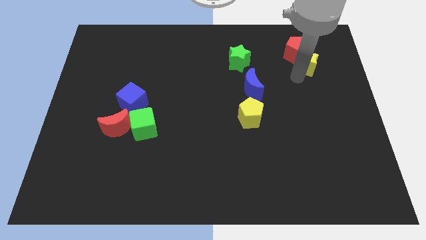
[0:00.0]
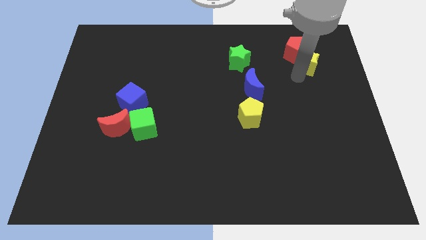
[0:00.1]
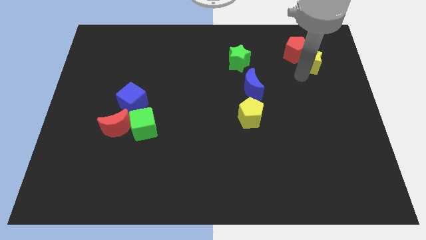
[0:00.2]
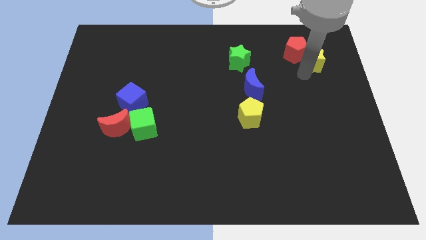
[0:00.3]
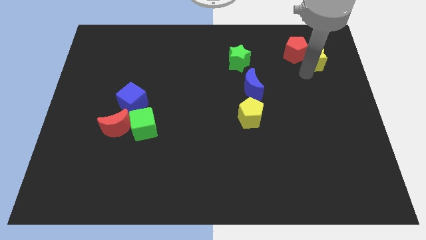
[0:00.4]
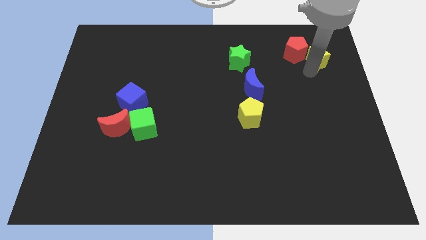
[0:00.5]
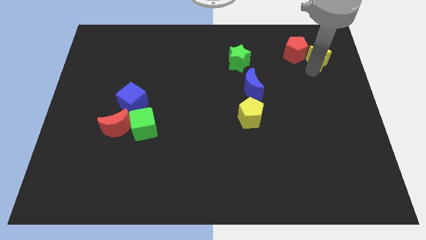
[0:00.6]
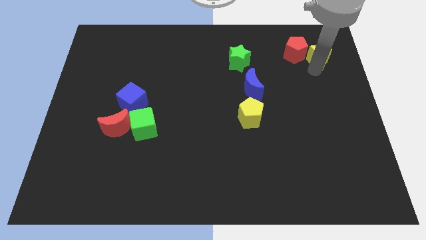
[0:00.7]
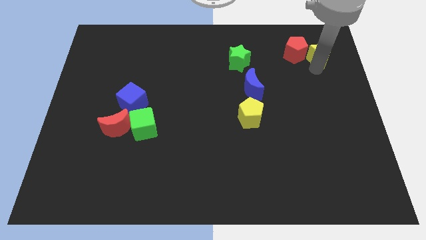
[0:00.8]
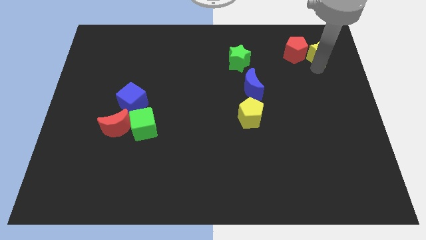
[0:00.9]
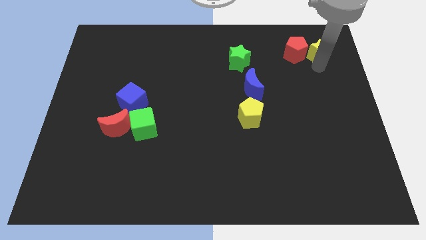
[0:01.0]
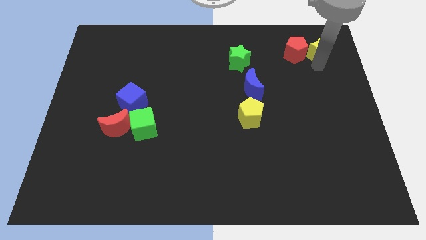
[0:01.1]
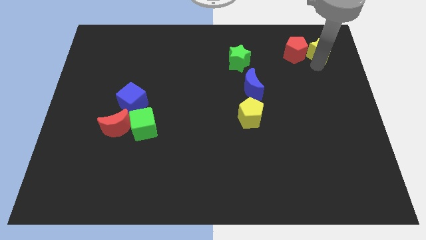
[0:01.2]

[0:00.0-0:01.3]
move the yellow star right to the red pentagon

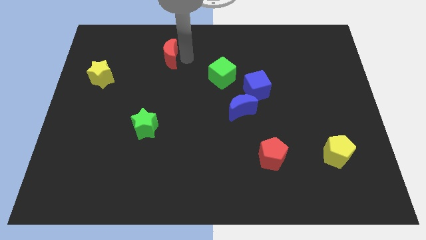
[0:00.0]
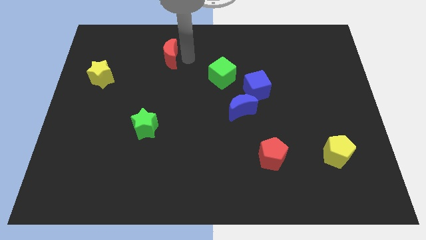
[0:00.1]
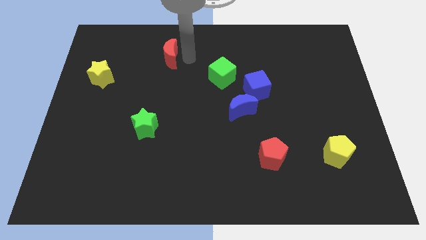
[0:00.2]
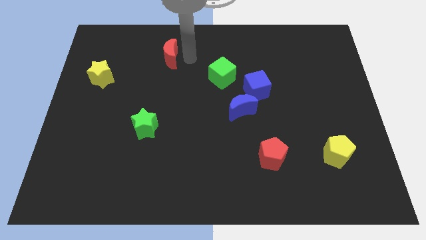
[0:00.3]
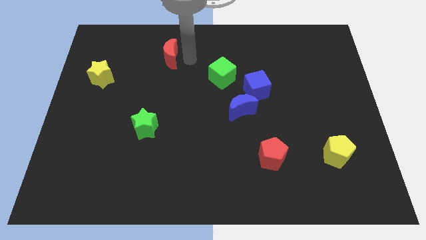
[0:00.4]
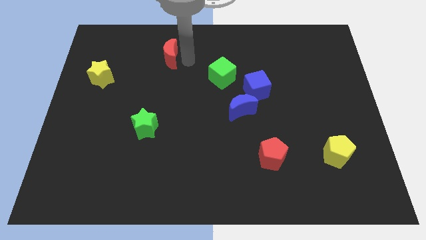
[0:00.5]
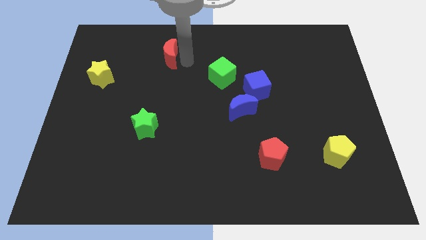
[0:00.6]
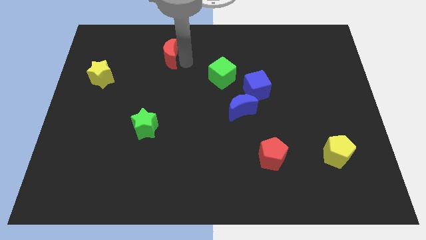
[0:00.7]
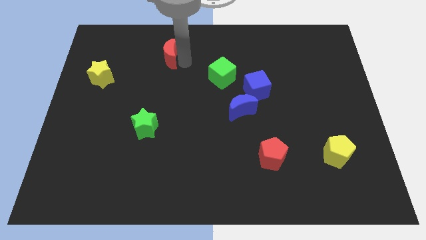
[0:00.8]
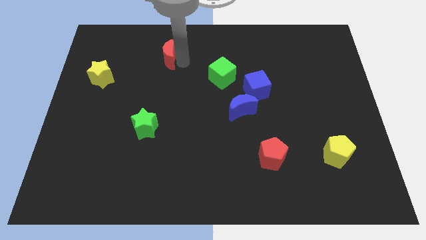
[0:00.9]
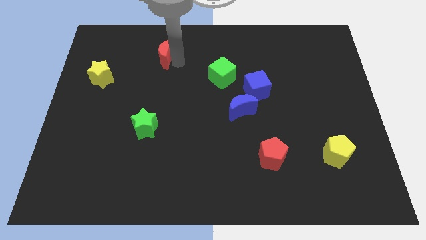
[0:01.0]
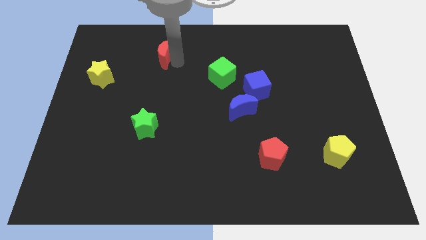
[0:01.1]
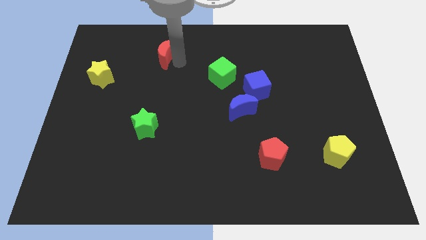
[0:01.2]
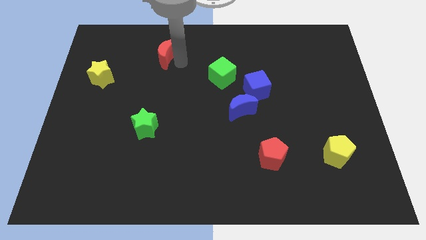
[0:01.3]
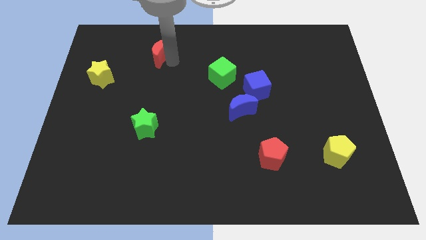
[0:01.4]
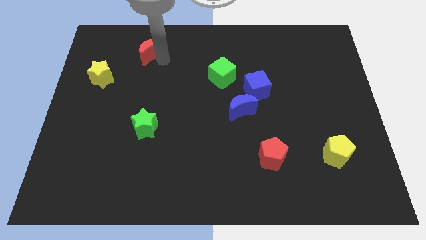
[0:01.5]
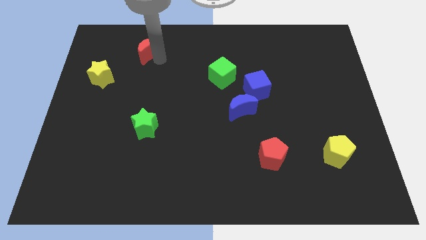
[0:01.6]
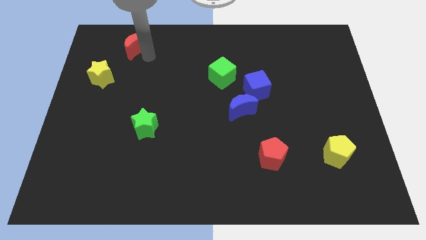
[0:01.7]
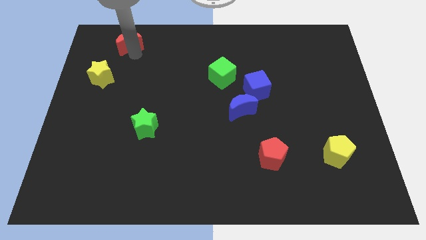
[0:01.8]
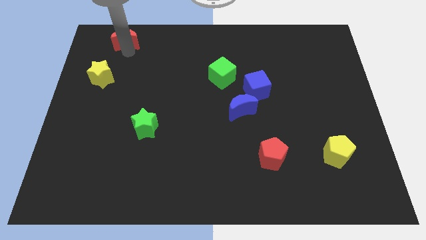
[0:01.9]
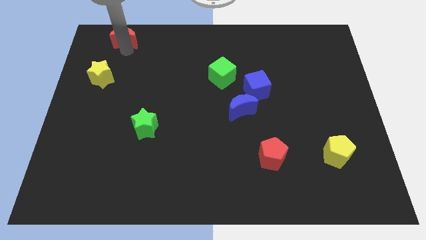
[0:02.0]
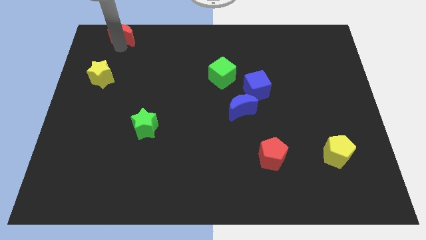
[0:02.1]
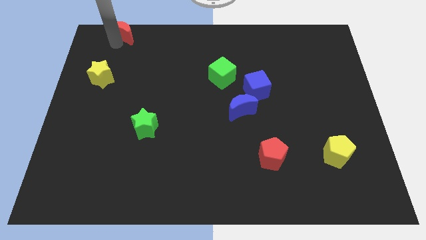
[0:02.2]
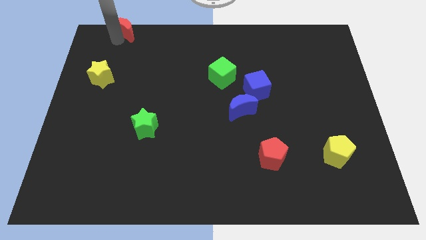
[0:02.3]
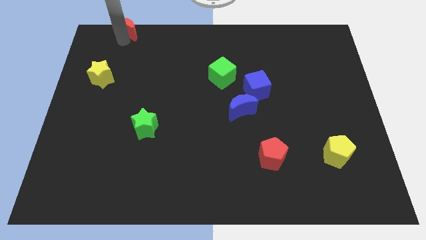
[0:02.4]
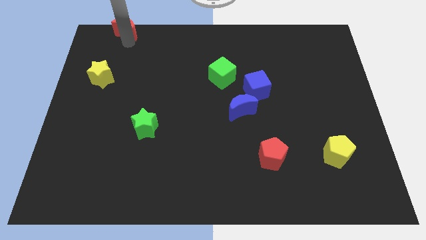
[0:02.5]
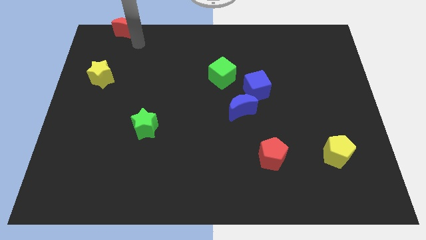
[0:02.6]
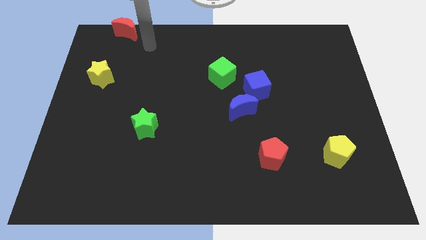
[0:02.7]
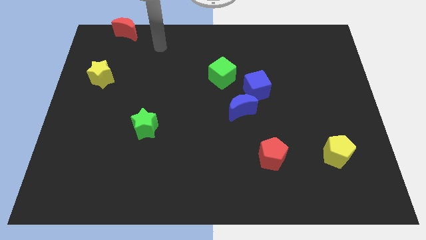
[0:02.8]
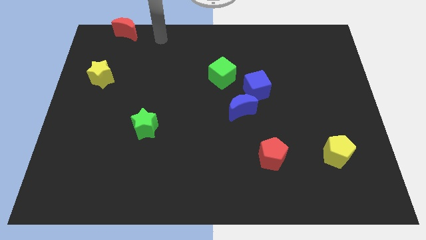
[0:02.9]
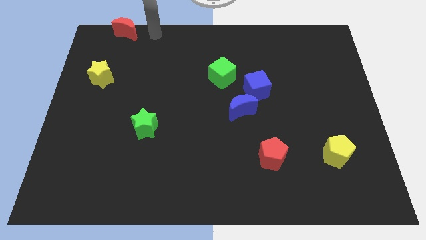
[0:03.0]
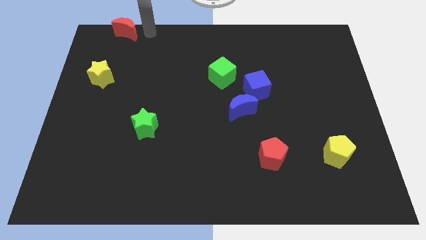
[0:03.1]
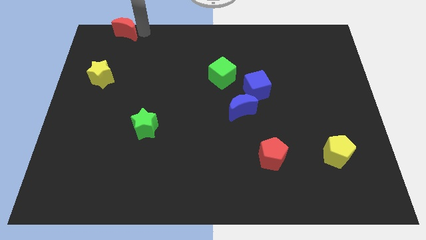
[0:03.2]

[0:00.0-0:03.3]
move red moon to the top left

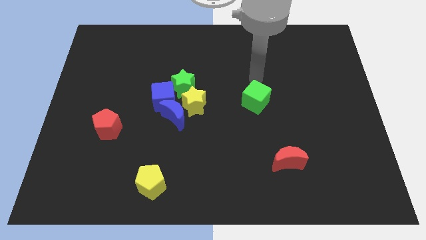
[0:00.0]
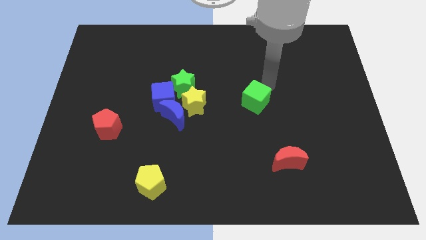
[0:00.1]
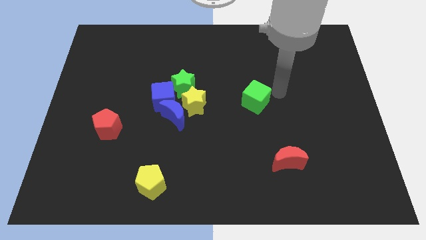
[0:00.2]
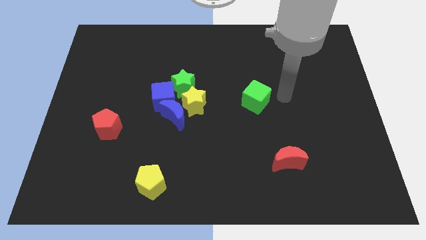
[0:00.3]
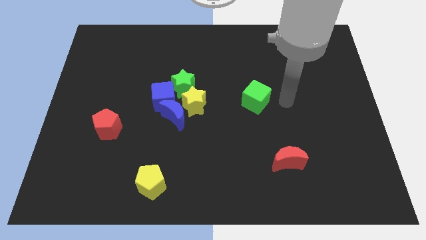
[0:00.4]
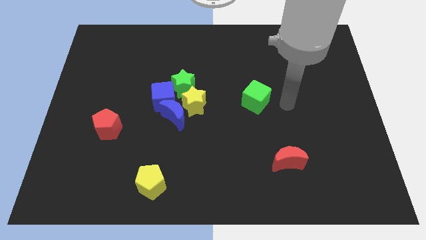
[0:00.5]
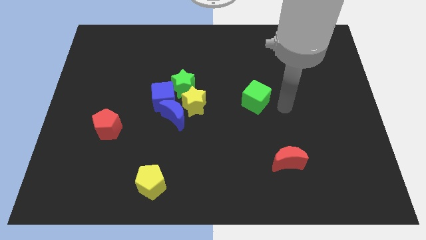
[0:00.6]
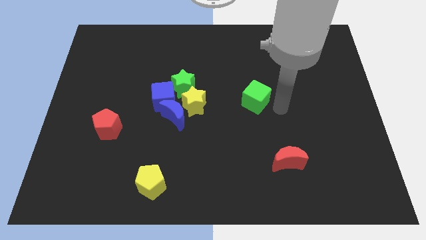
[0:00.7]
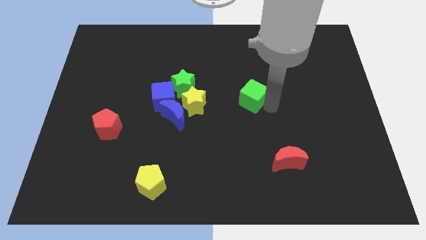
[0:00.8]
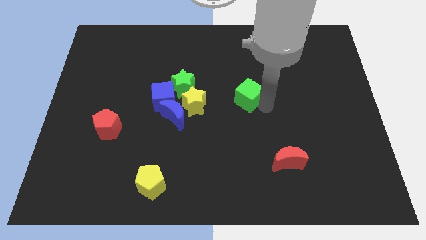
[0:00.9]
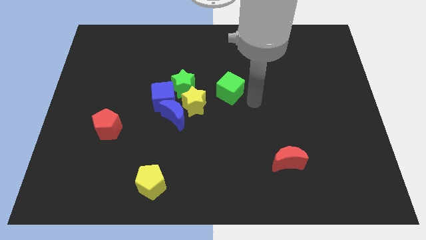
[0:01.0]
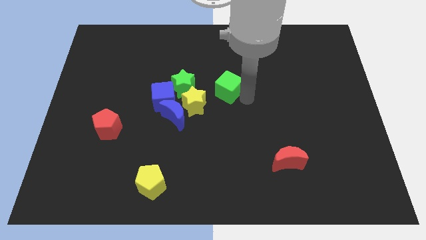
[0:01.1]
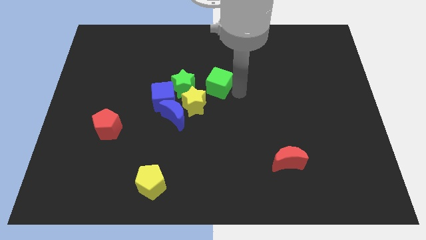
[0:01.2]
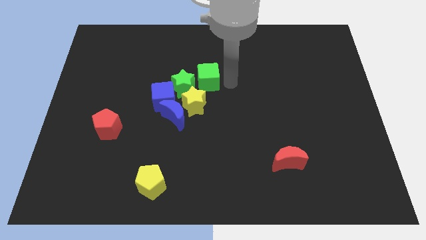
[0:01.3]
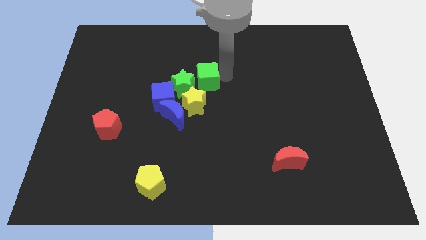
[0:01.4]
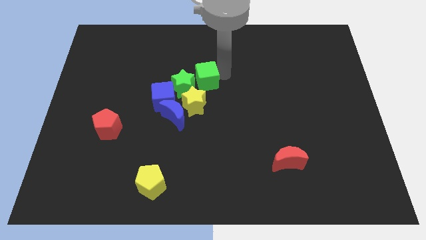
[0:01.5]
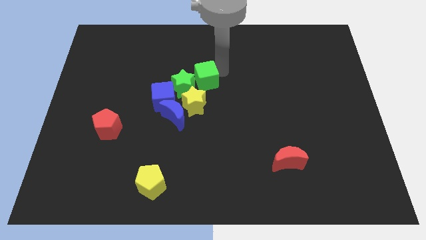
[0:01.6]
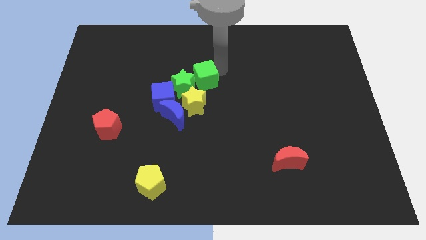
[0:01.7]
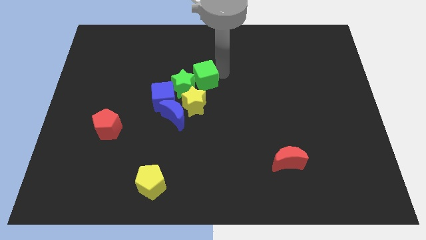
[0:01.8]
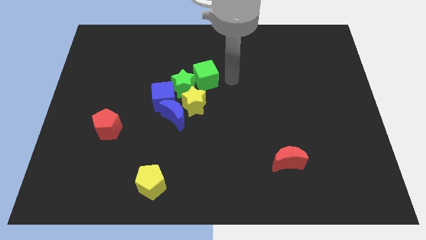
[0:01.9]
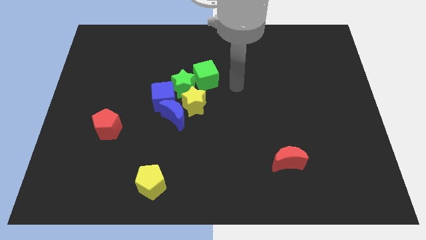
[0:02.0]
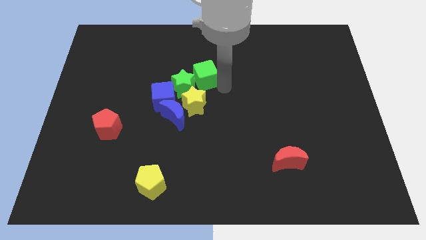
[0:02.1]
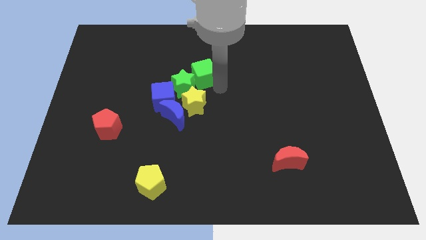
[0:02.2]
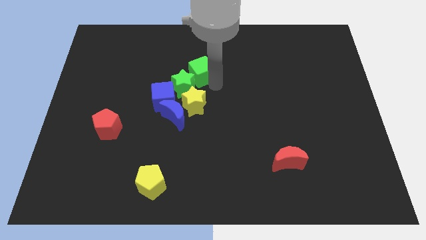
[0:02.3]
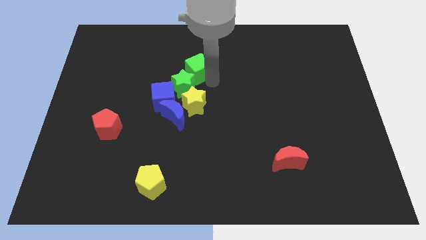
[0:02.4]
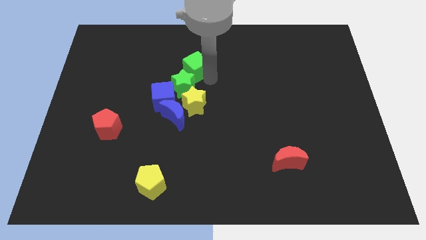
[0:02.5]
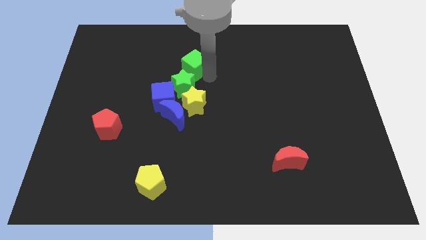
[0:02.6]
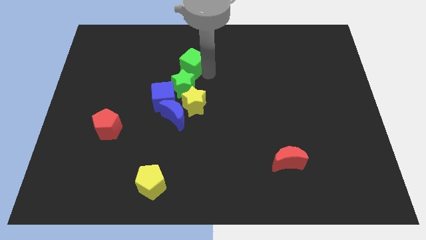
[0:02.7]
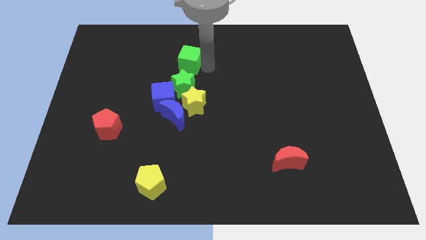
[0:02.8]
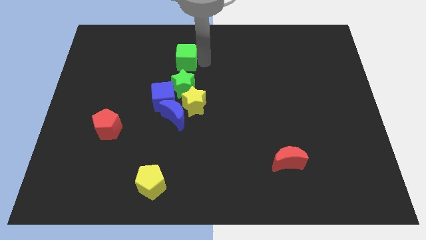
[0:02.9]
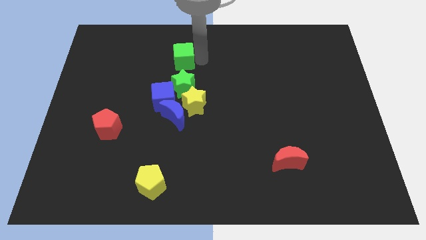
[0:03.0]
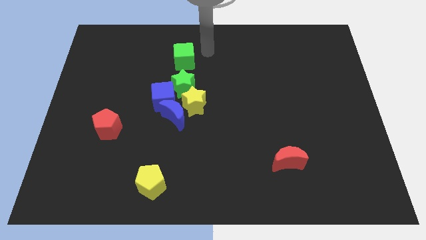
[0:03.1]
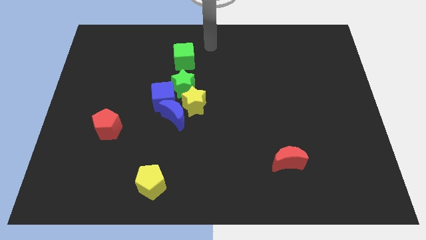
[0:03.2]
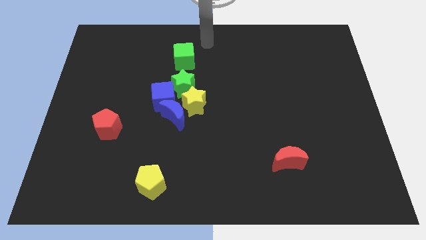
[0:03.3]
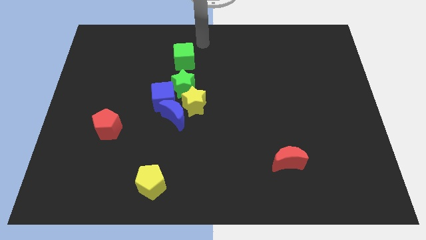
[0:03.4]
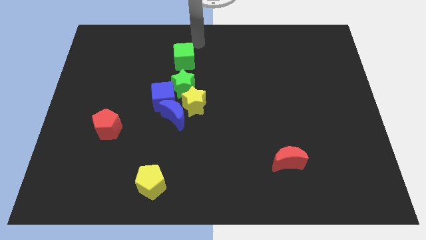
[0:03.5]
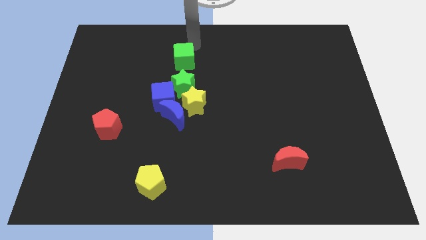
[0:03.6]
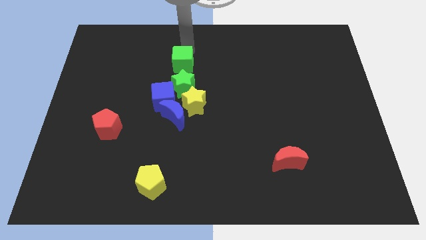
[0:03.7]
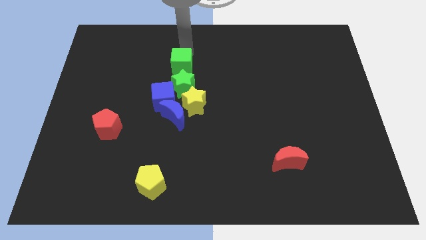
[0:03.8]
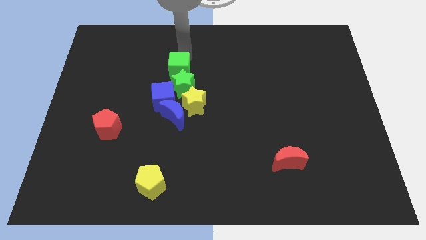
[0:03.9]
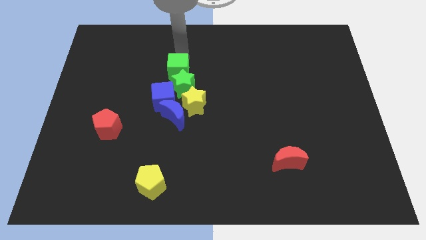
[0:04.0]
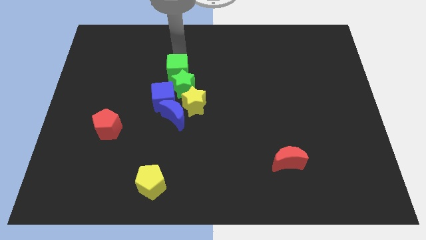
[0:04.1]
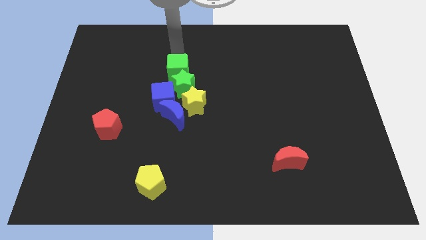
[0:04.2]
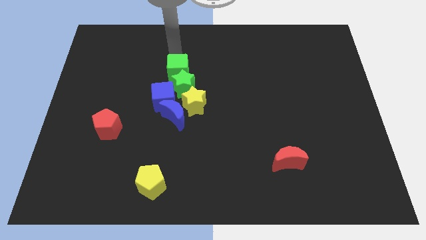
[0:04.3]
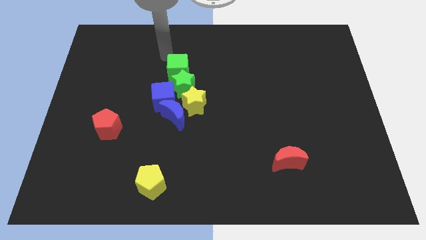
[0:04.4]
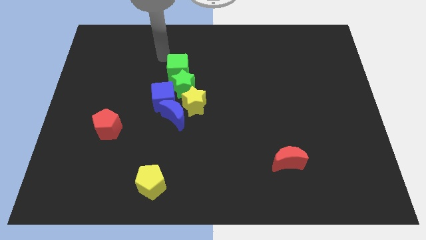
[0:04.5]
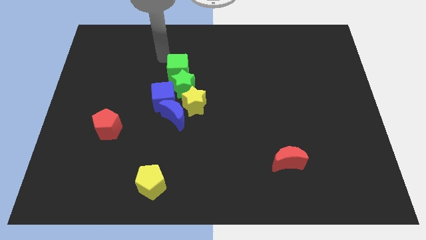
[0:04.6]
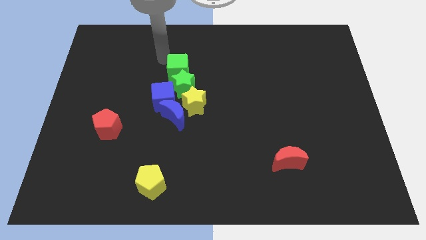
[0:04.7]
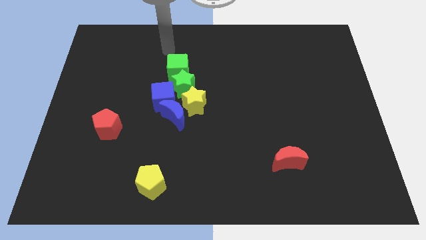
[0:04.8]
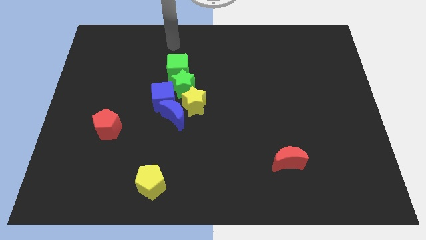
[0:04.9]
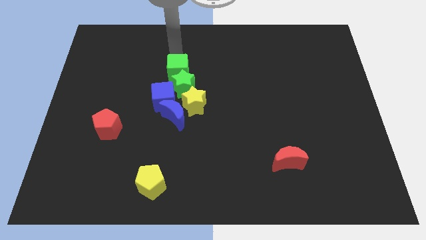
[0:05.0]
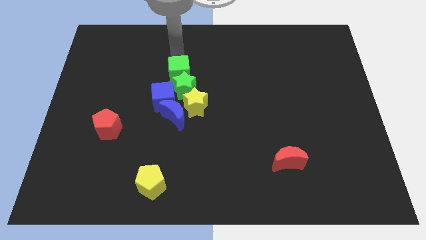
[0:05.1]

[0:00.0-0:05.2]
move the green cube above the green star
